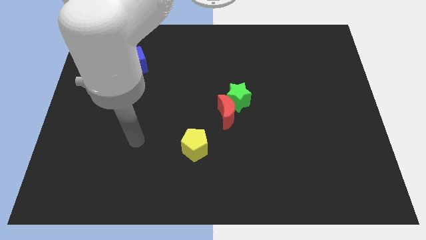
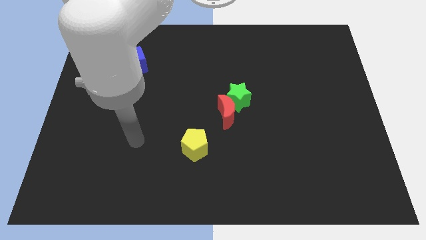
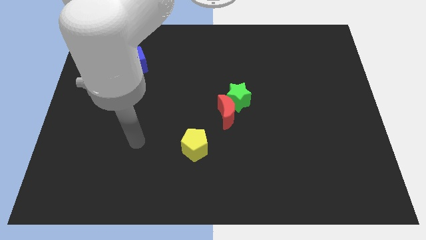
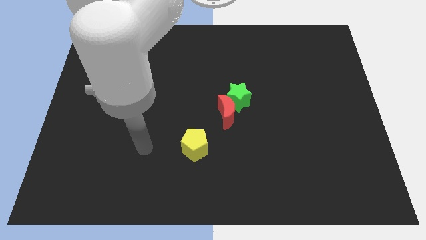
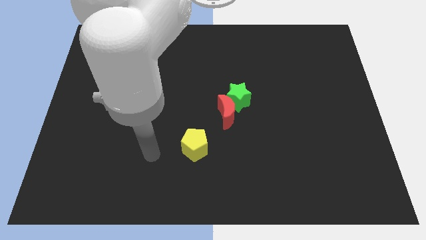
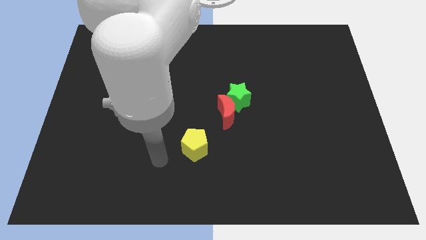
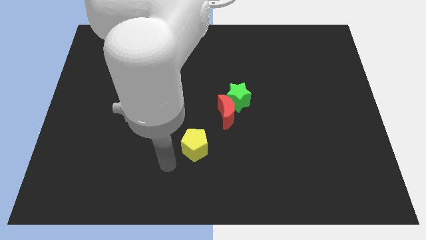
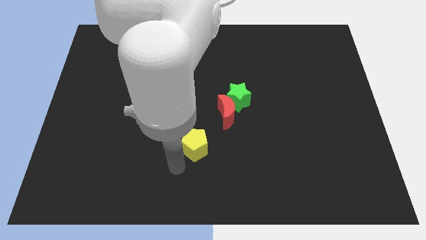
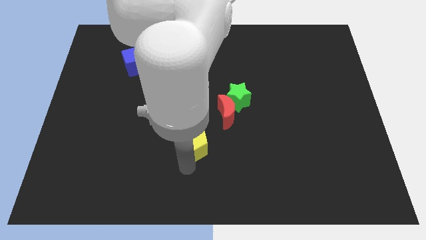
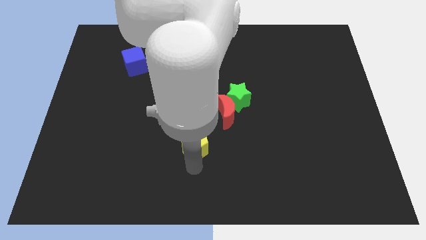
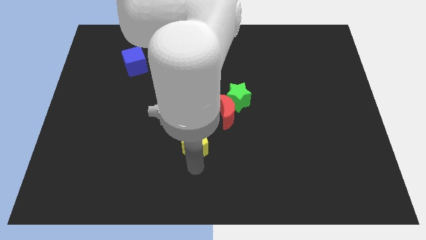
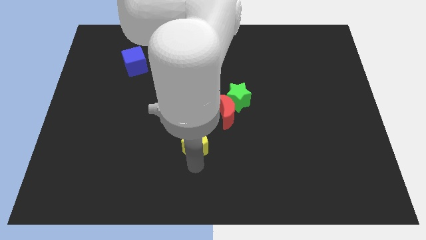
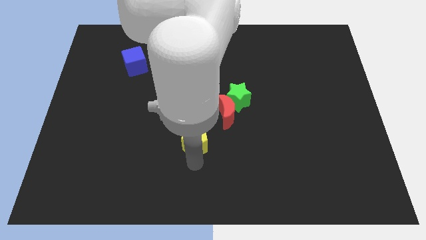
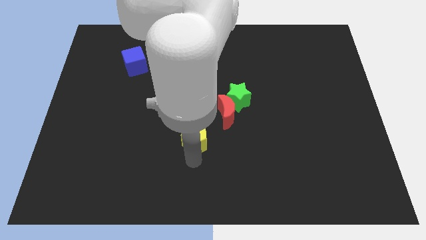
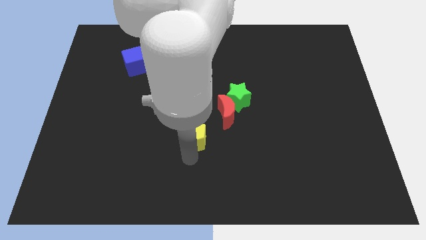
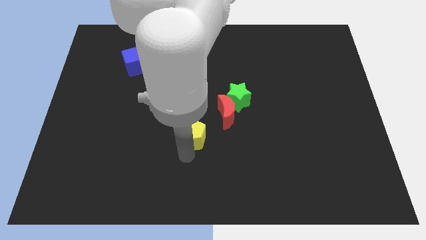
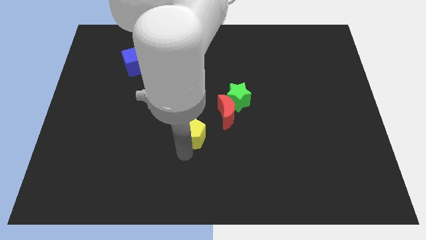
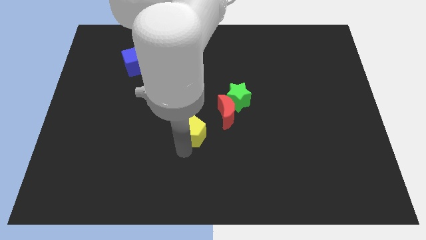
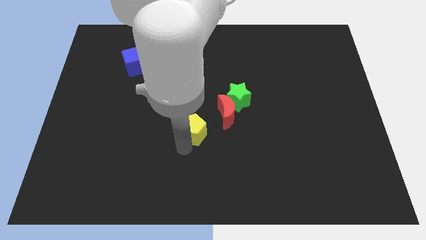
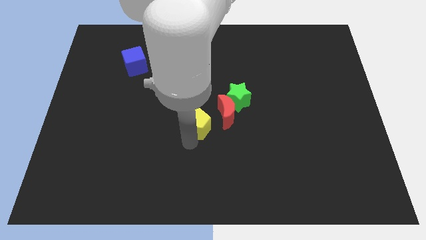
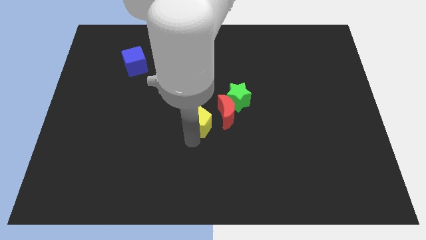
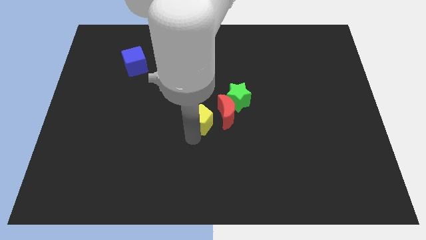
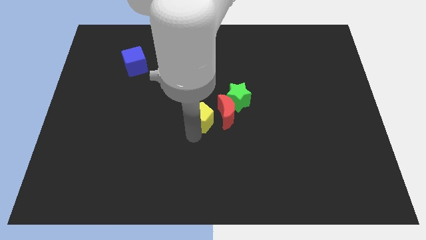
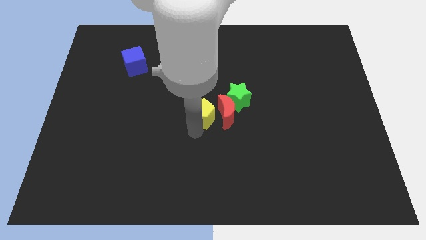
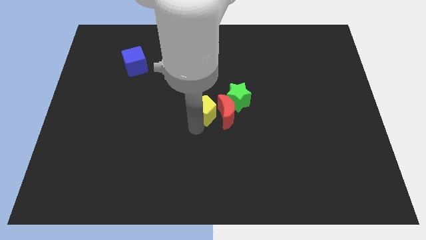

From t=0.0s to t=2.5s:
put the yellow block to the moon

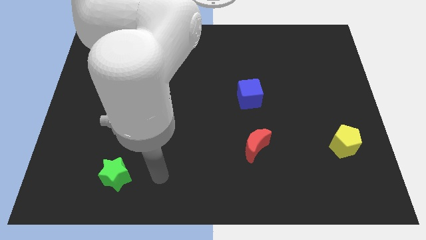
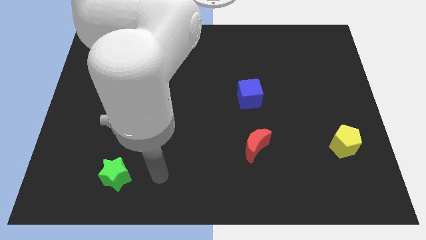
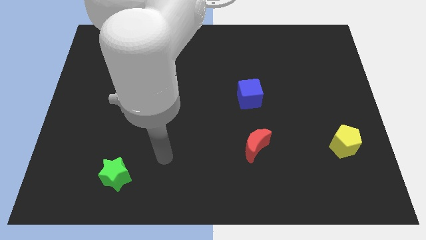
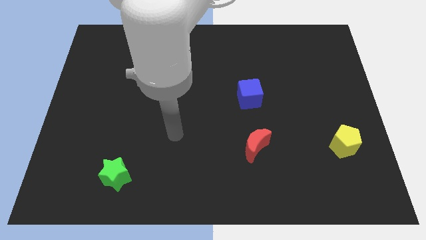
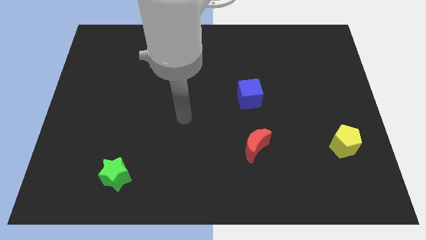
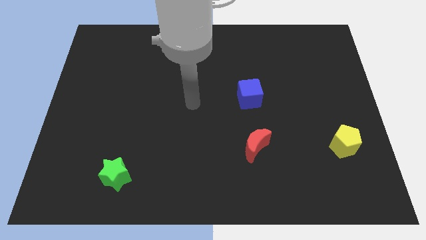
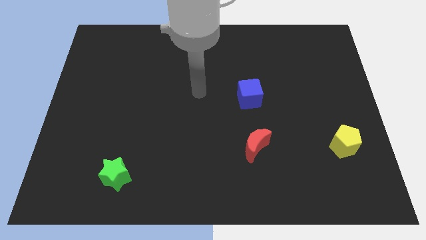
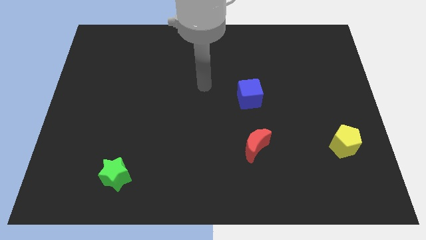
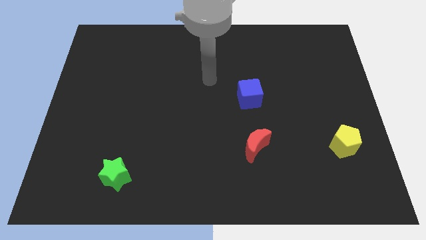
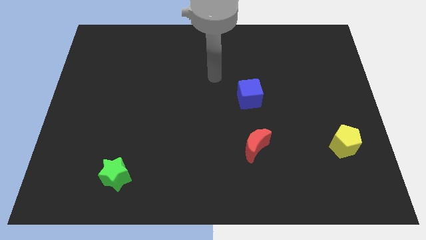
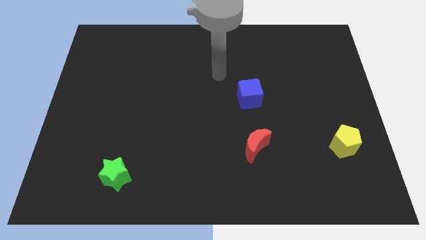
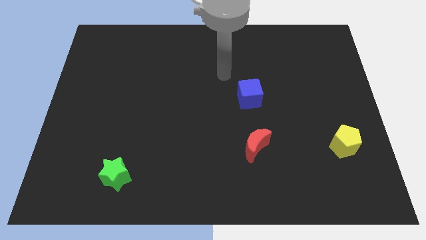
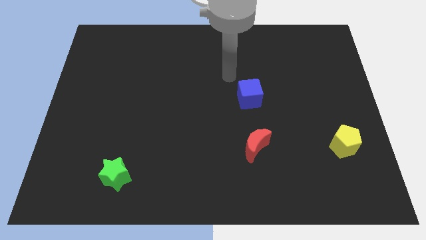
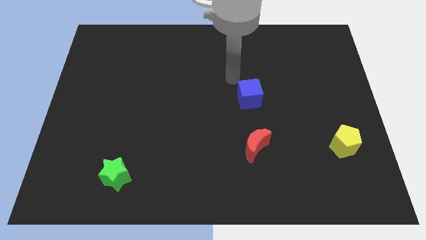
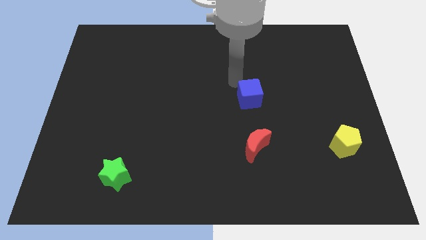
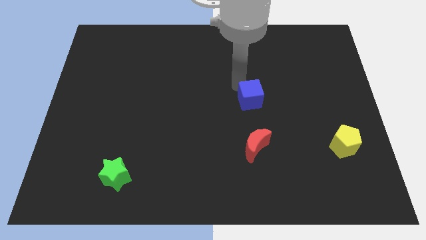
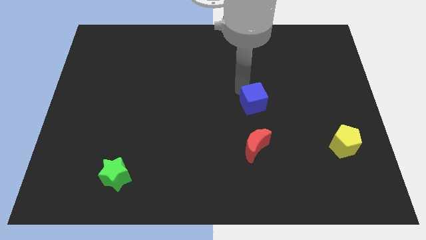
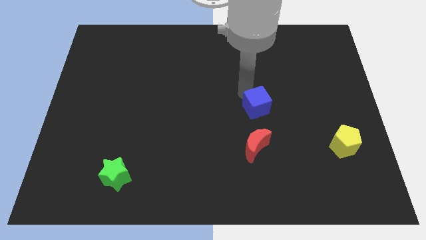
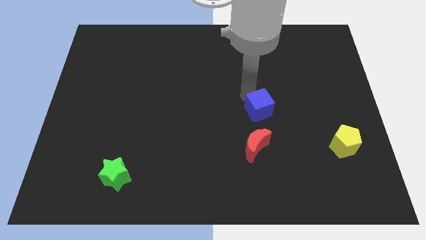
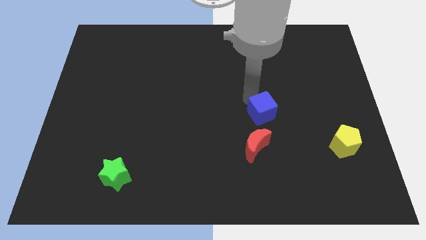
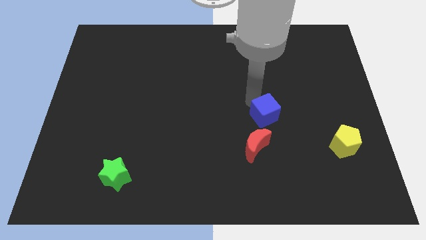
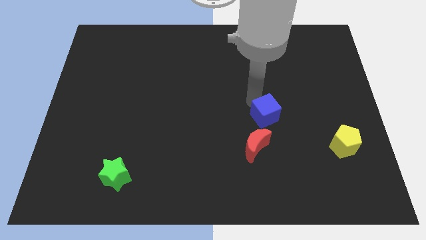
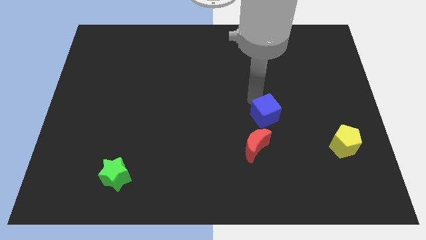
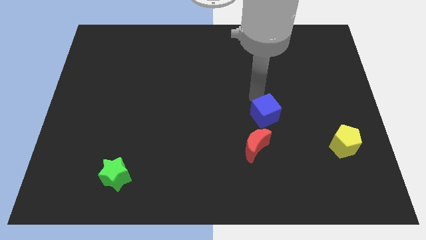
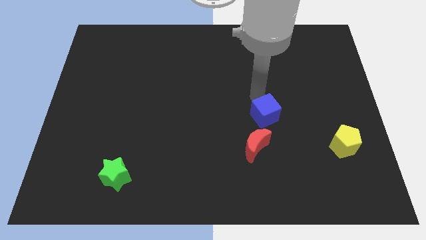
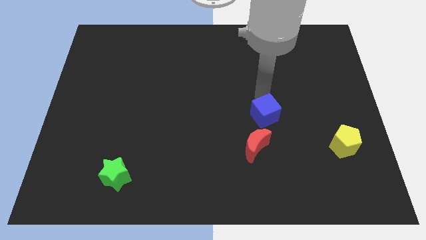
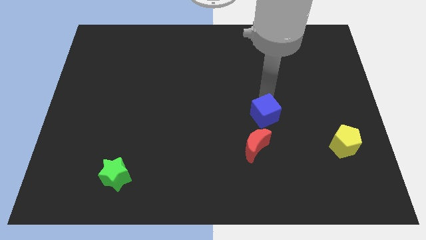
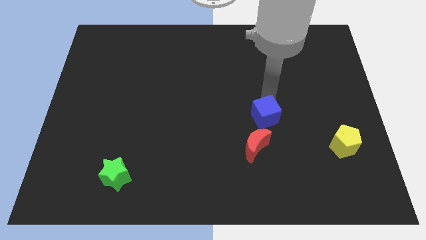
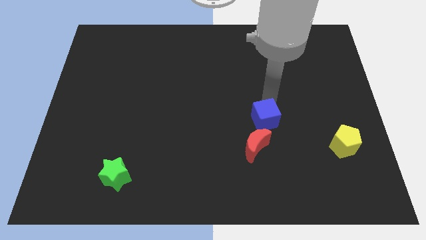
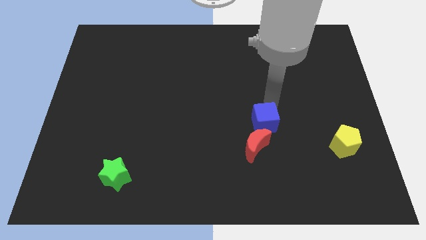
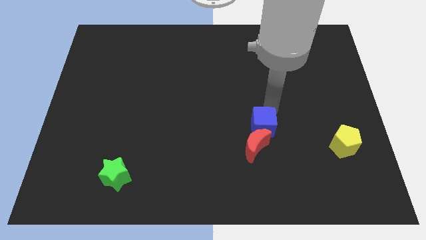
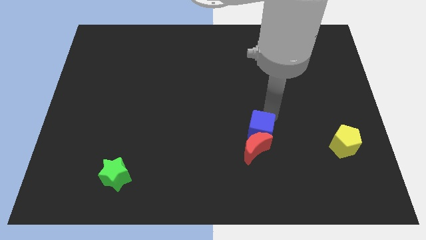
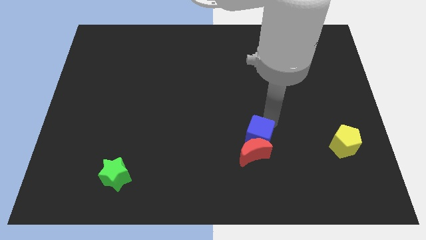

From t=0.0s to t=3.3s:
move the blue block close to the red moon

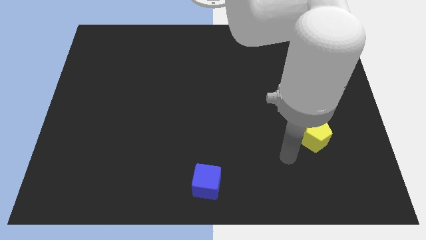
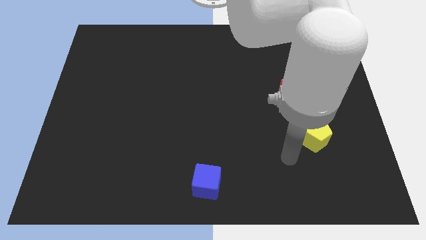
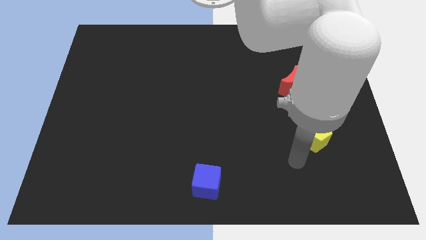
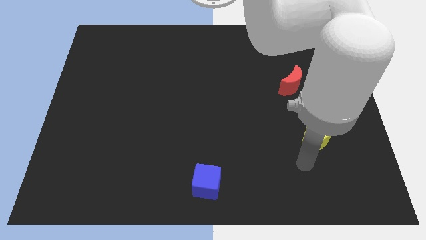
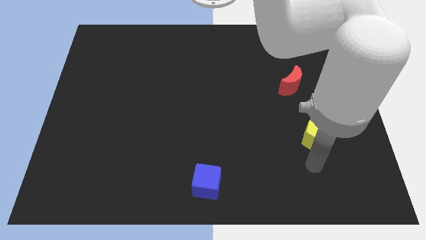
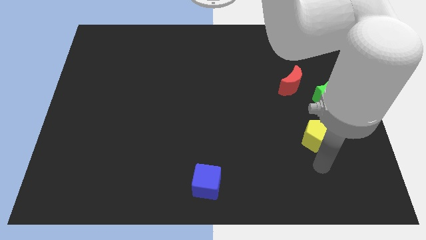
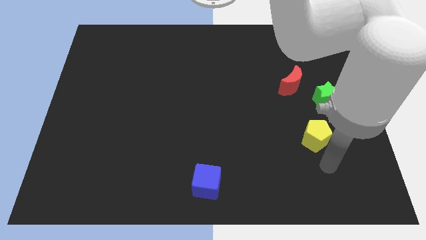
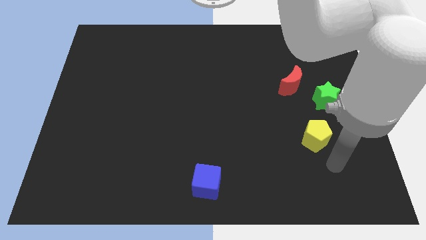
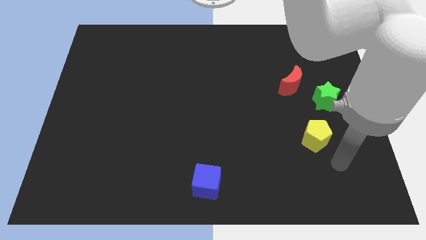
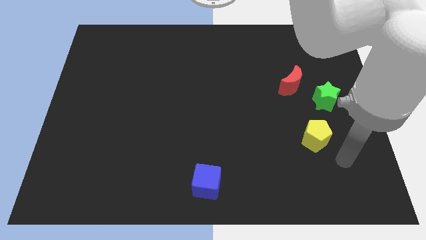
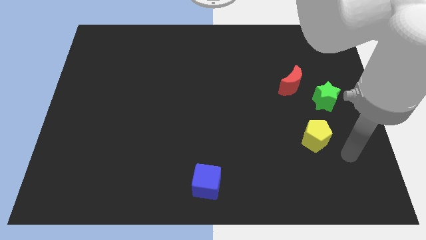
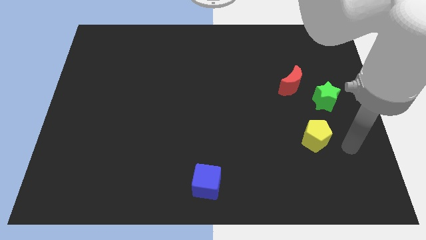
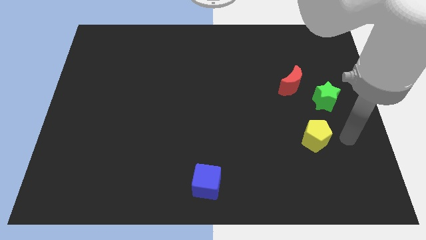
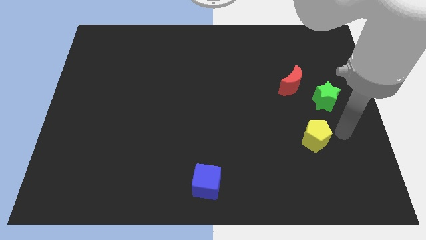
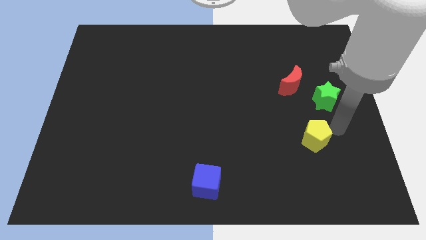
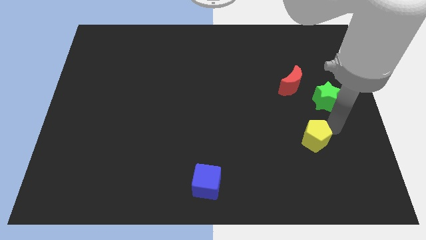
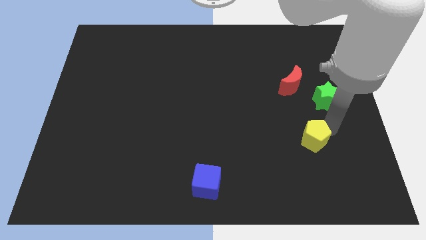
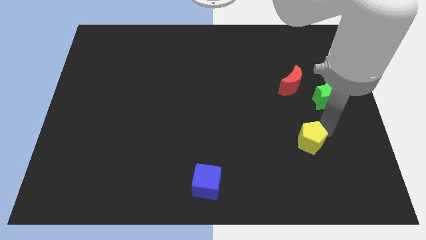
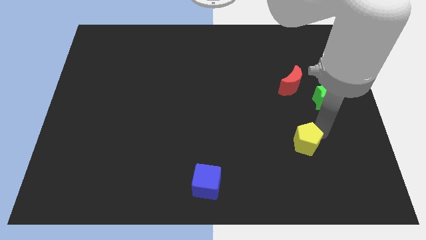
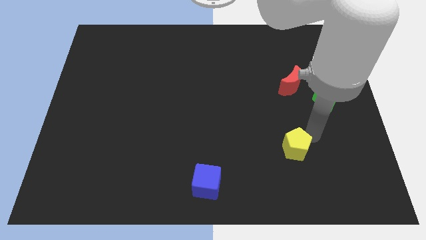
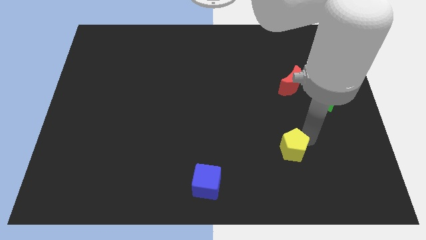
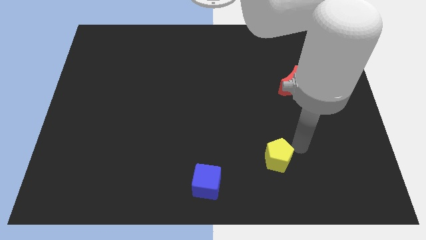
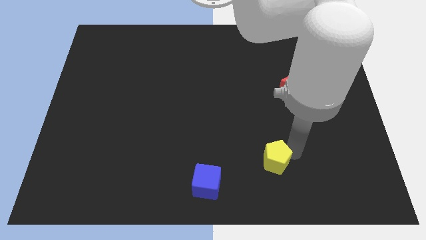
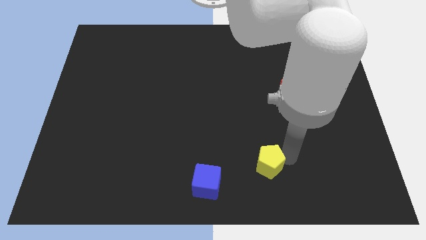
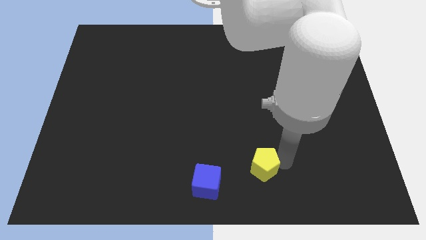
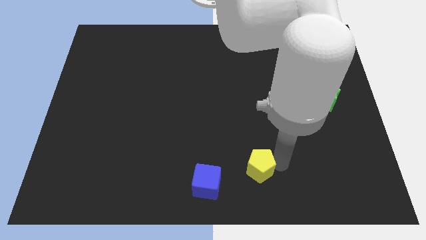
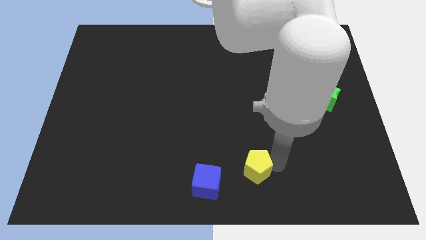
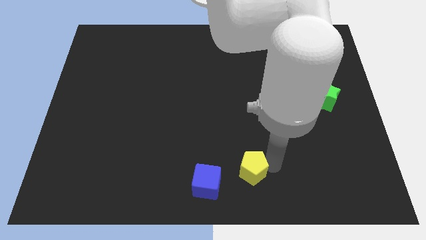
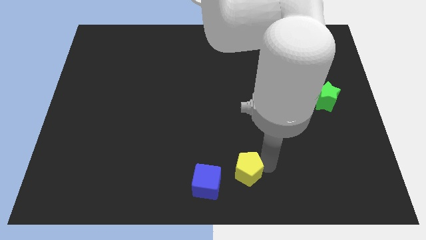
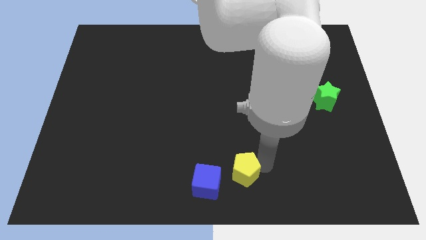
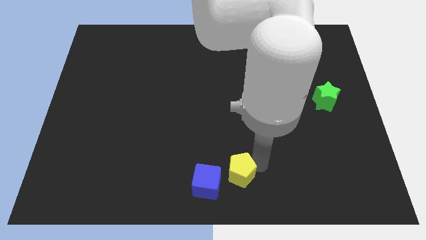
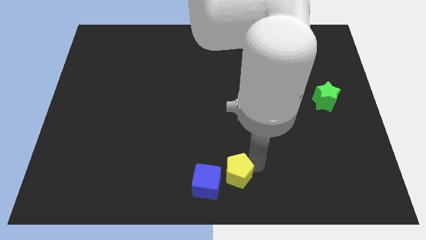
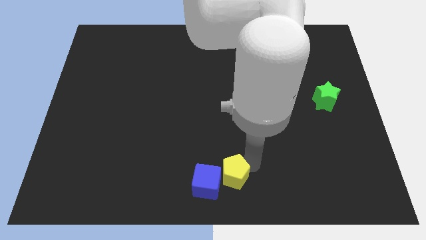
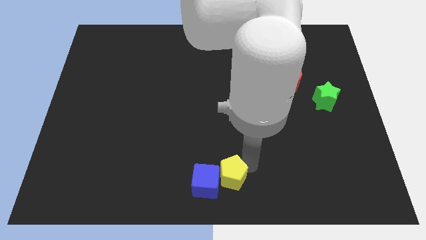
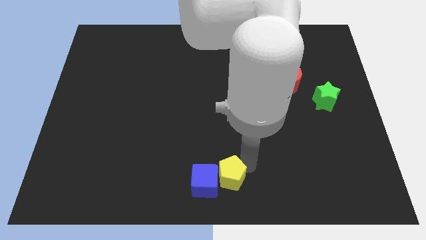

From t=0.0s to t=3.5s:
slide the yellow block next to the cube
